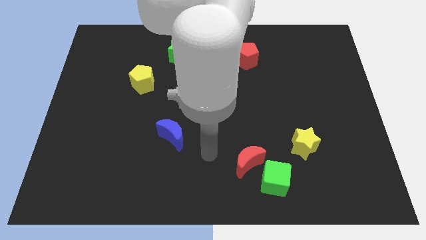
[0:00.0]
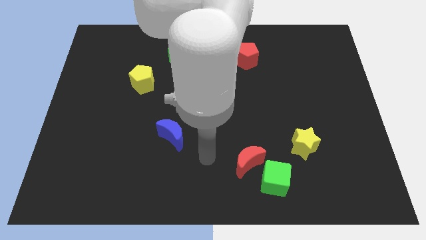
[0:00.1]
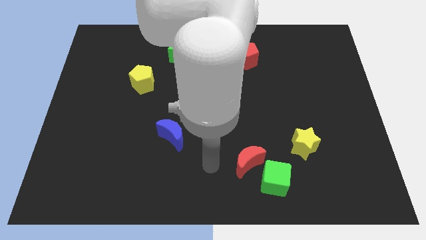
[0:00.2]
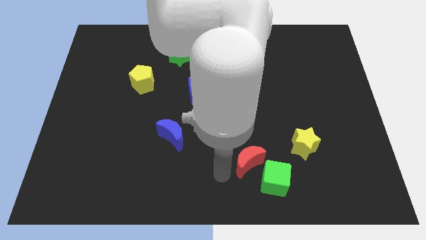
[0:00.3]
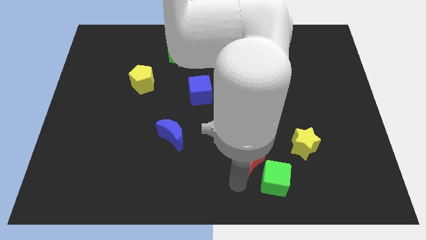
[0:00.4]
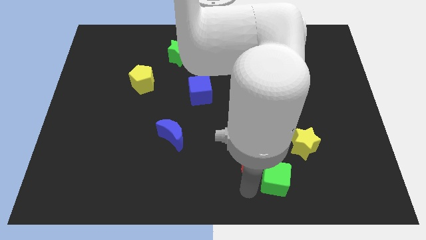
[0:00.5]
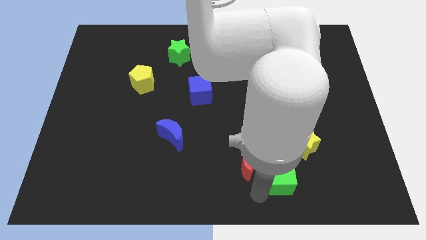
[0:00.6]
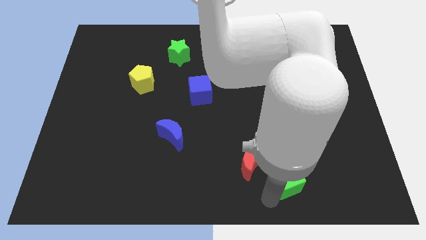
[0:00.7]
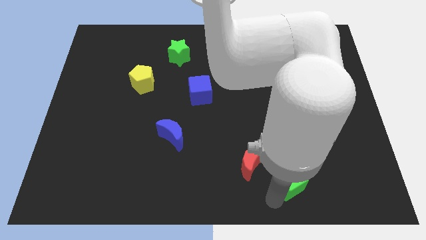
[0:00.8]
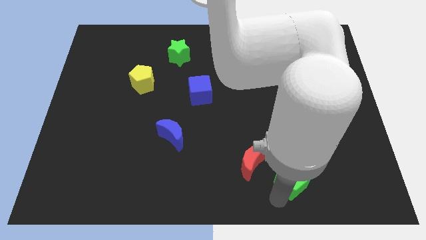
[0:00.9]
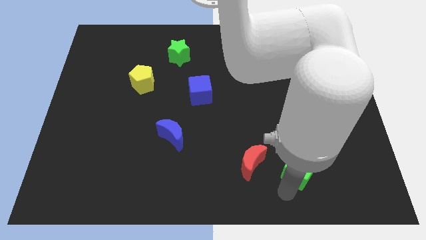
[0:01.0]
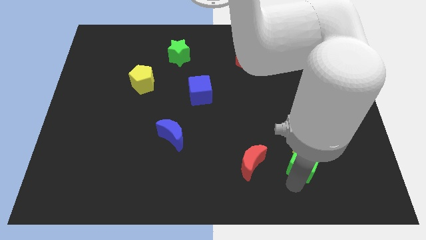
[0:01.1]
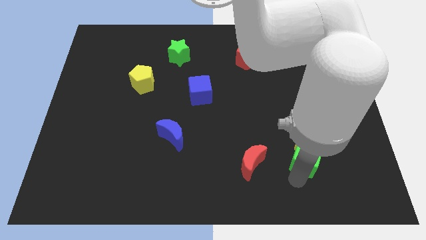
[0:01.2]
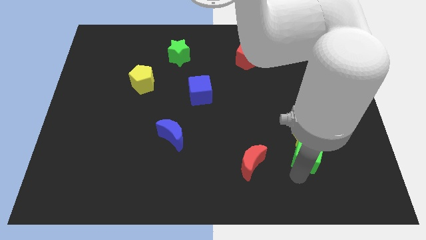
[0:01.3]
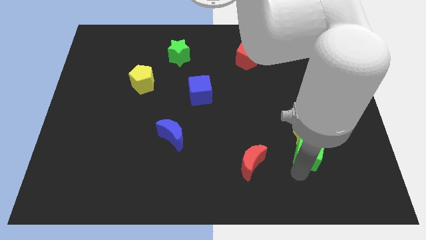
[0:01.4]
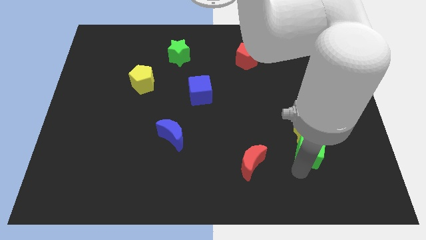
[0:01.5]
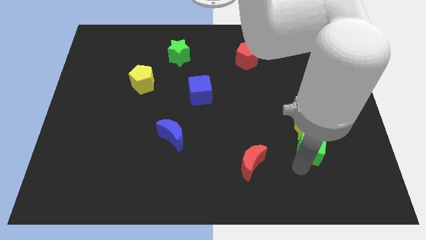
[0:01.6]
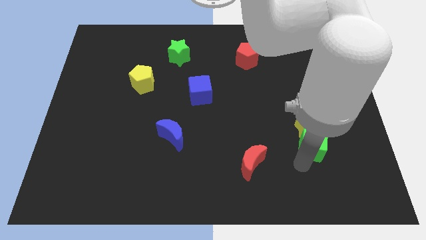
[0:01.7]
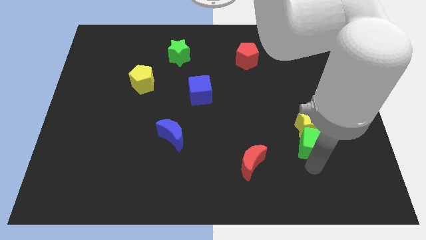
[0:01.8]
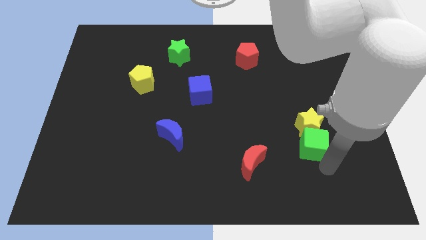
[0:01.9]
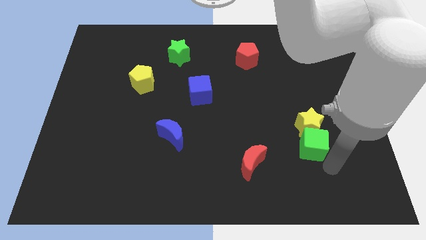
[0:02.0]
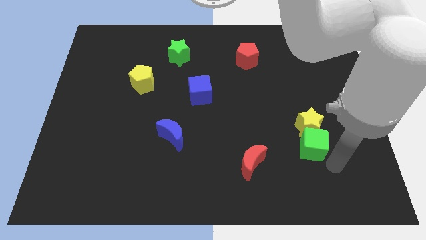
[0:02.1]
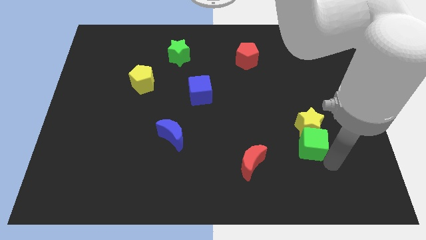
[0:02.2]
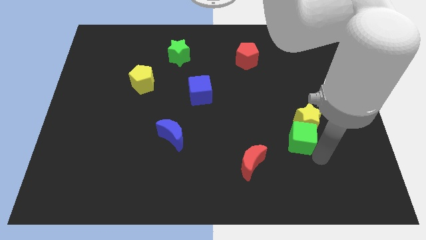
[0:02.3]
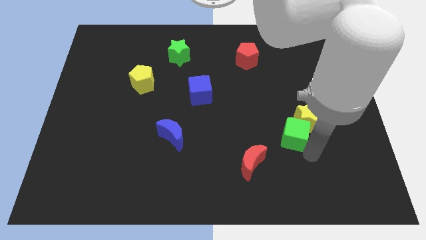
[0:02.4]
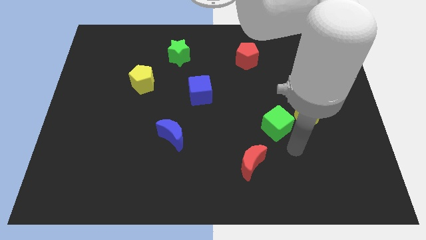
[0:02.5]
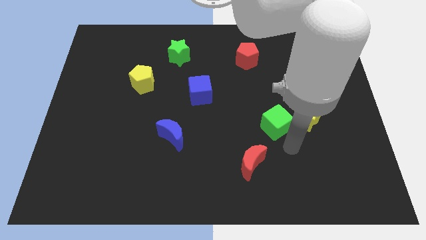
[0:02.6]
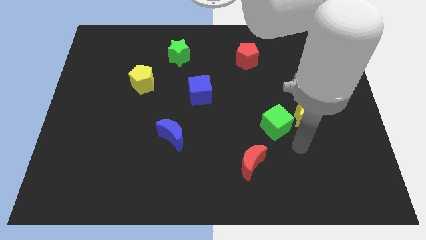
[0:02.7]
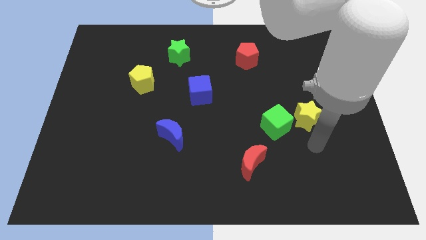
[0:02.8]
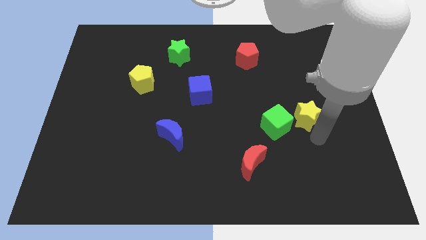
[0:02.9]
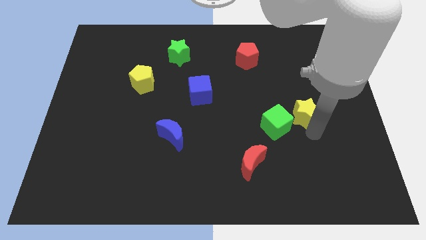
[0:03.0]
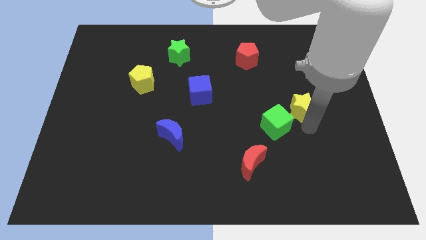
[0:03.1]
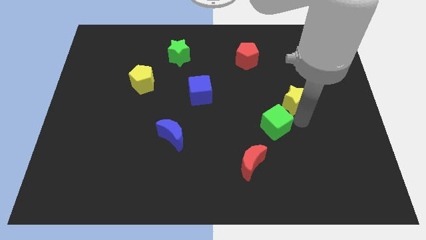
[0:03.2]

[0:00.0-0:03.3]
move the green cube and yellow star diagonally on the top right side of the red crescent

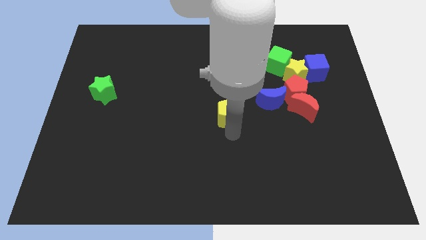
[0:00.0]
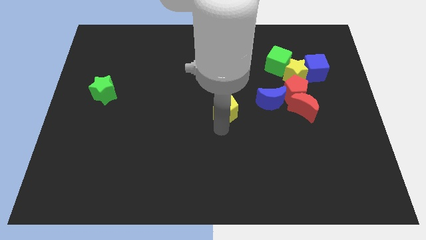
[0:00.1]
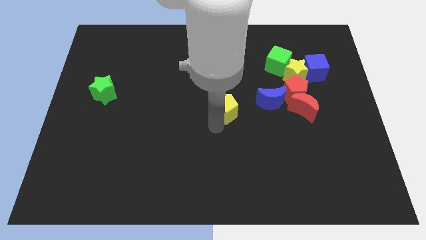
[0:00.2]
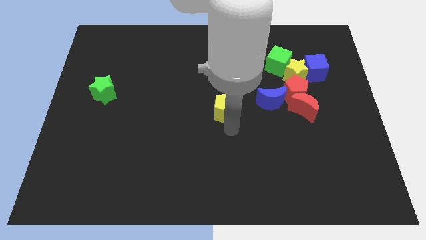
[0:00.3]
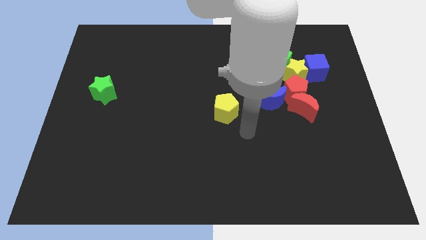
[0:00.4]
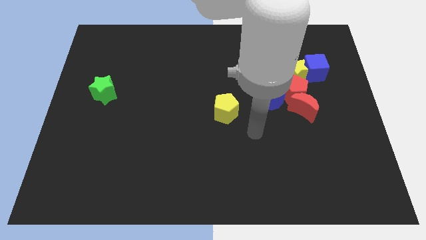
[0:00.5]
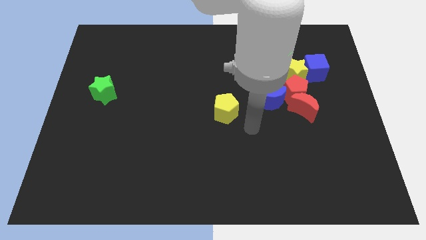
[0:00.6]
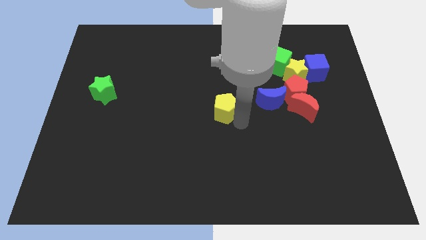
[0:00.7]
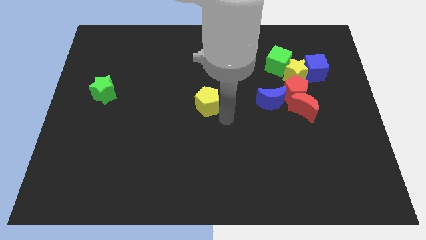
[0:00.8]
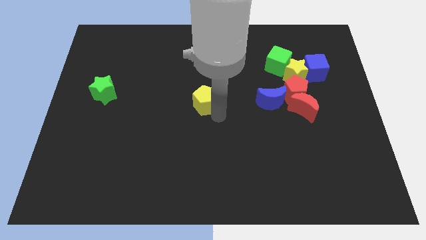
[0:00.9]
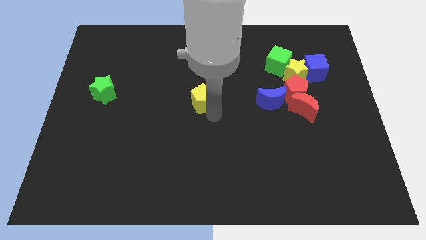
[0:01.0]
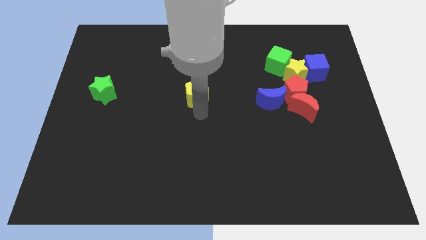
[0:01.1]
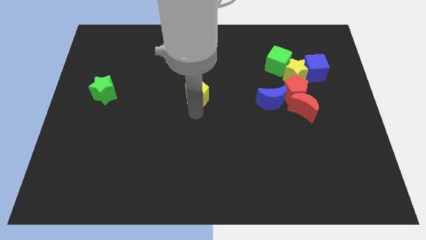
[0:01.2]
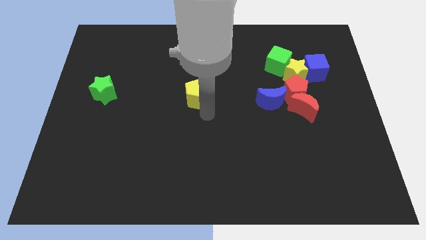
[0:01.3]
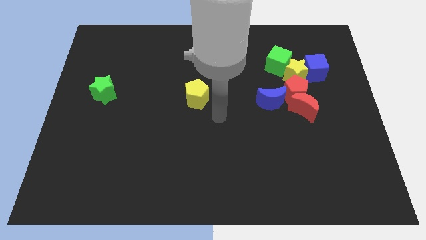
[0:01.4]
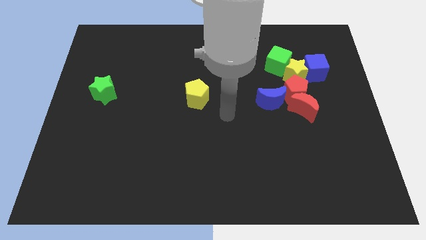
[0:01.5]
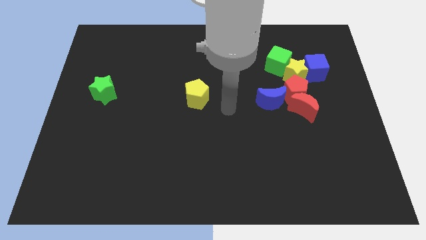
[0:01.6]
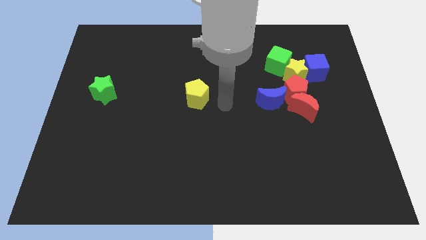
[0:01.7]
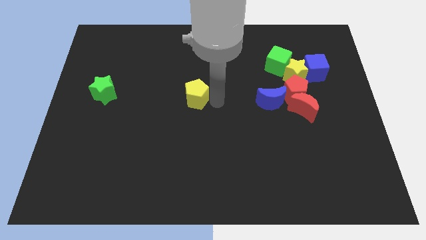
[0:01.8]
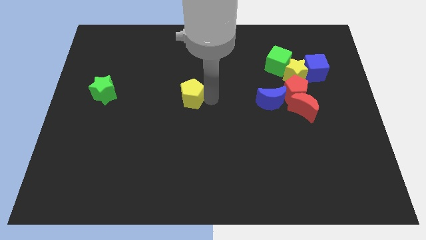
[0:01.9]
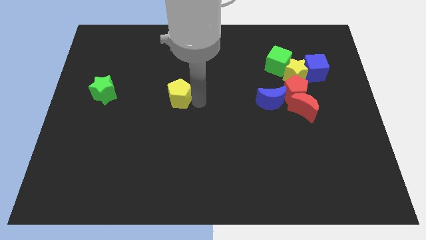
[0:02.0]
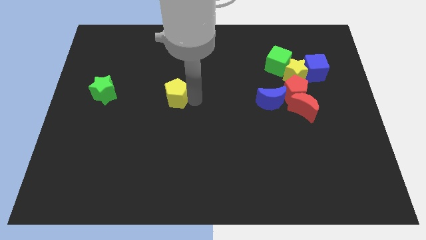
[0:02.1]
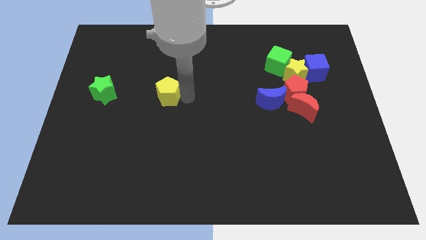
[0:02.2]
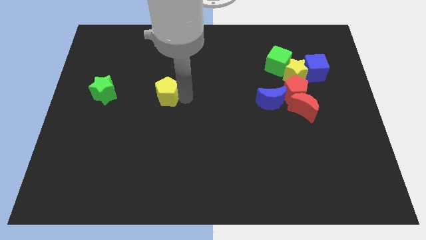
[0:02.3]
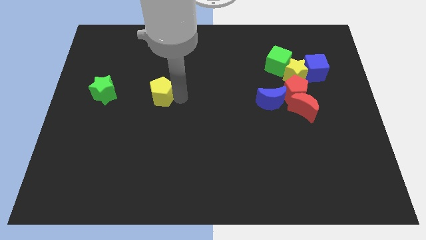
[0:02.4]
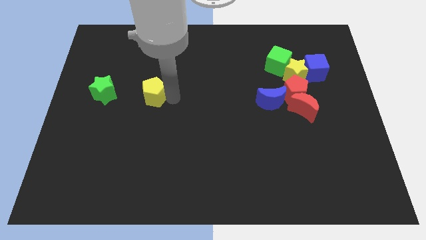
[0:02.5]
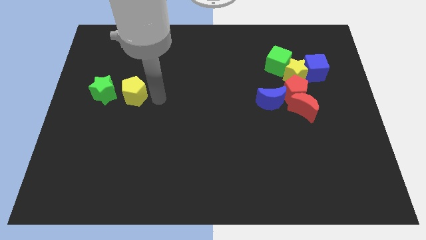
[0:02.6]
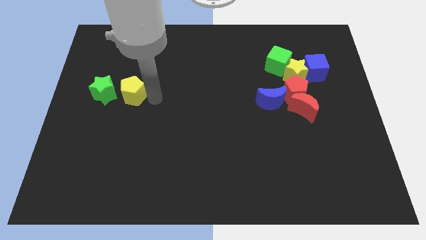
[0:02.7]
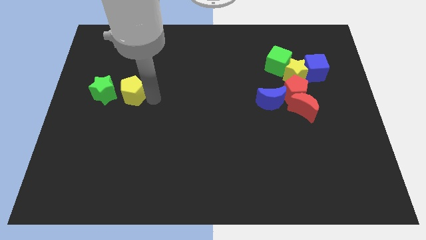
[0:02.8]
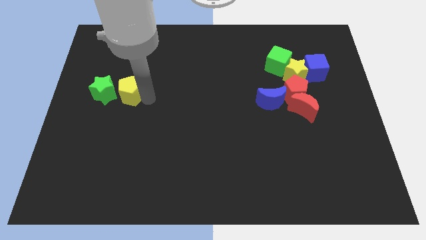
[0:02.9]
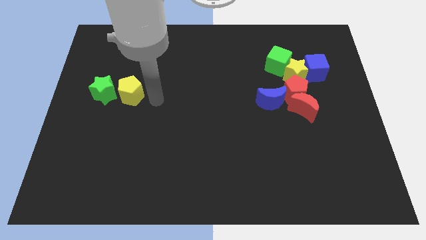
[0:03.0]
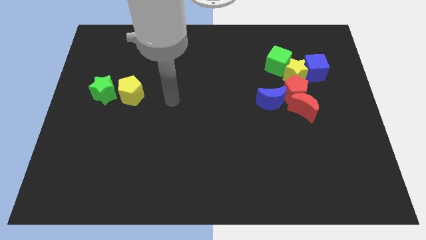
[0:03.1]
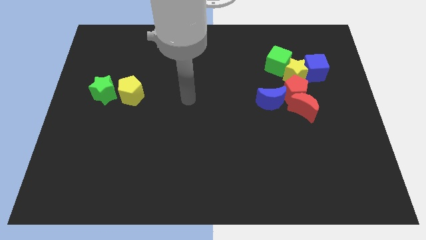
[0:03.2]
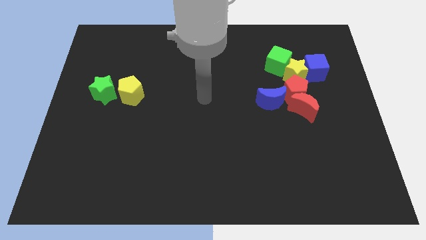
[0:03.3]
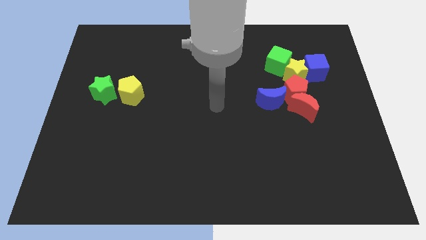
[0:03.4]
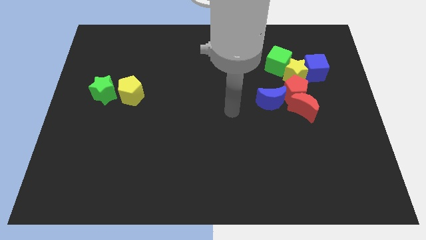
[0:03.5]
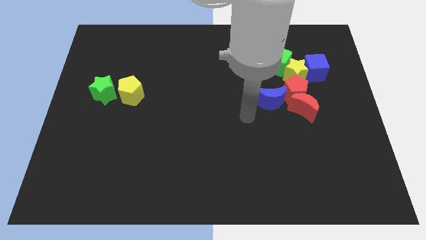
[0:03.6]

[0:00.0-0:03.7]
slide the yellow pentagon to the right of the green star

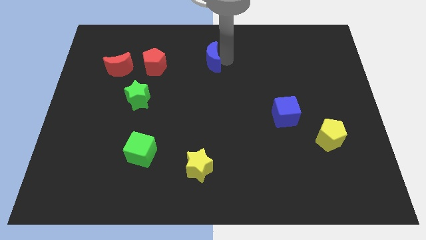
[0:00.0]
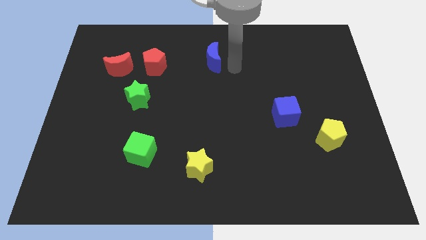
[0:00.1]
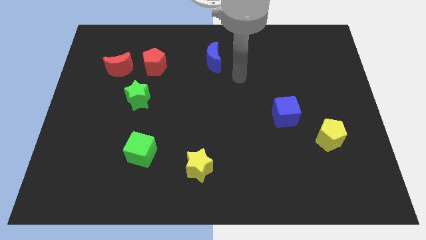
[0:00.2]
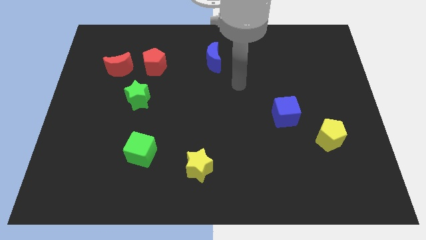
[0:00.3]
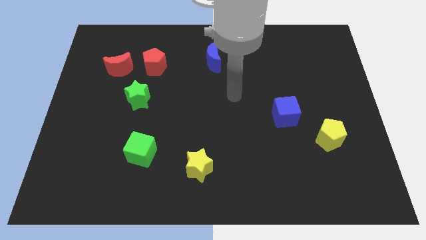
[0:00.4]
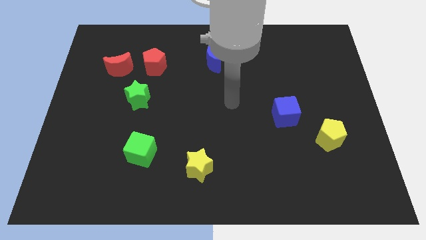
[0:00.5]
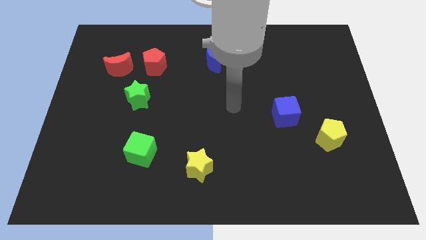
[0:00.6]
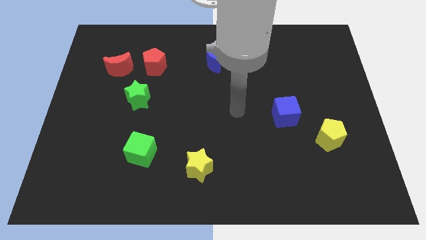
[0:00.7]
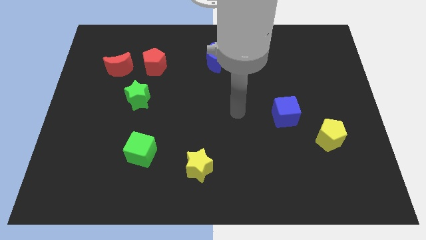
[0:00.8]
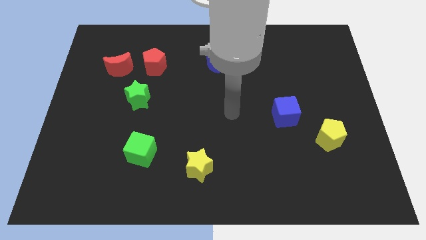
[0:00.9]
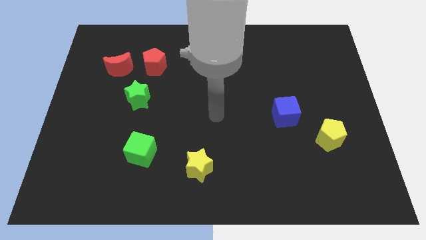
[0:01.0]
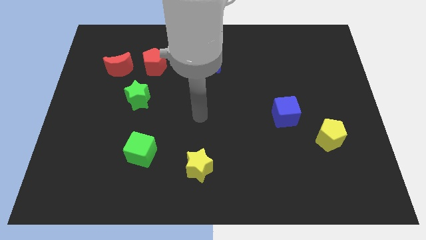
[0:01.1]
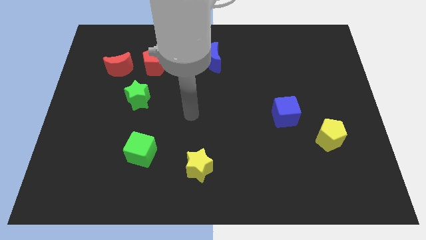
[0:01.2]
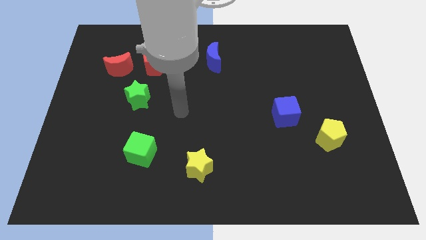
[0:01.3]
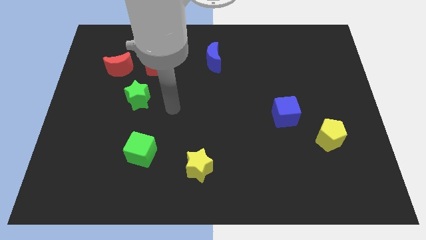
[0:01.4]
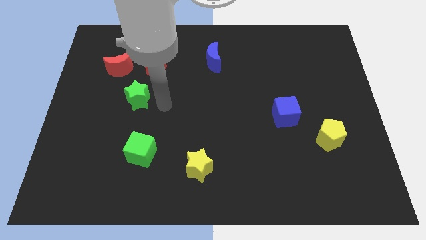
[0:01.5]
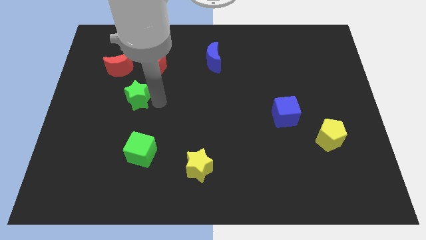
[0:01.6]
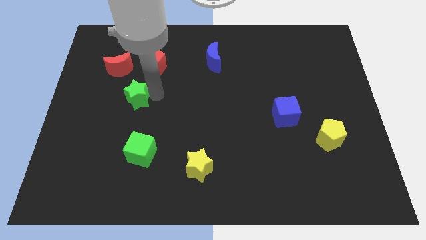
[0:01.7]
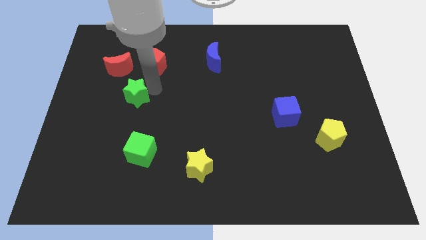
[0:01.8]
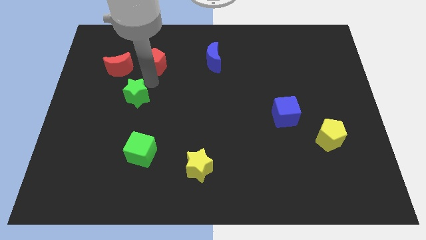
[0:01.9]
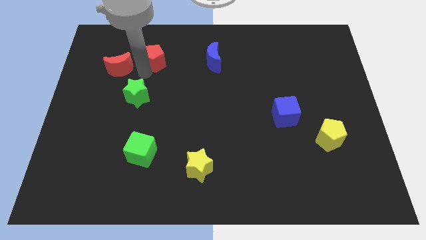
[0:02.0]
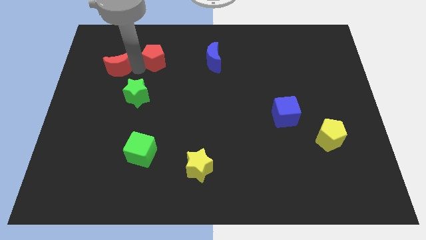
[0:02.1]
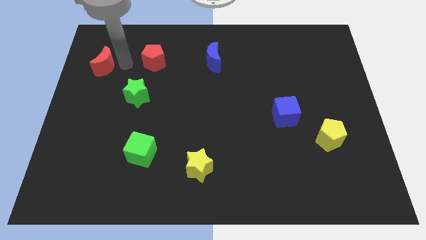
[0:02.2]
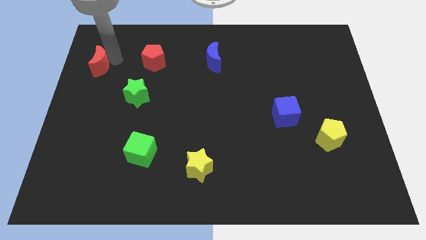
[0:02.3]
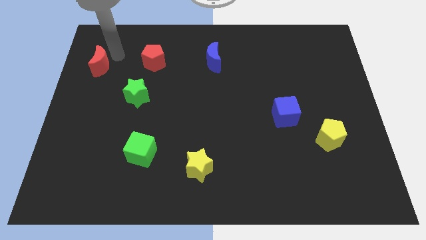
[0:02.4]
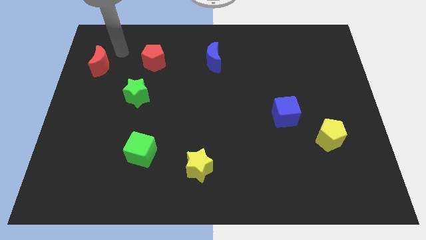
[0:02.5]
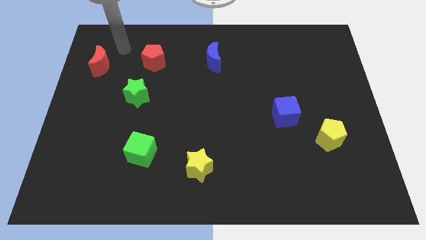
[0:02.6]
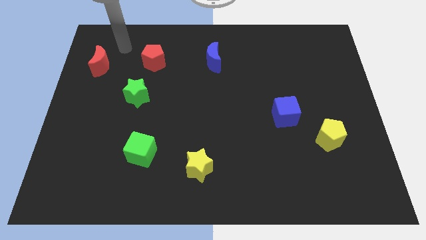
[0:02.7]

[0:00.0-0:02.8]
move your arm away from the blue moon
